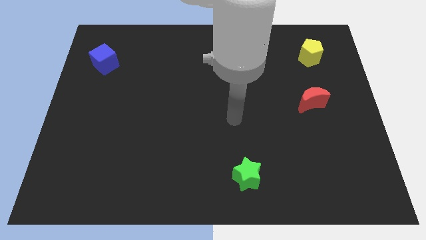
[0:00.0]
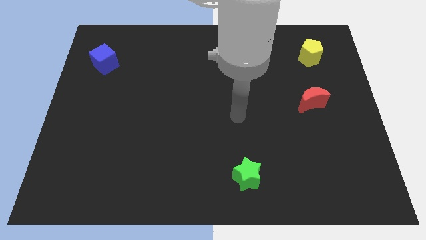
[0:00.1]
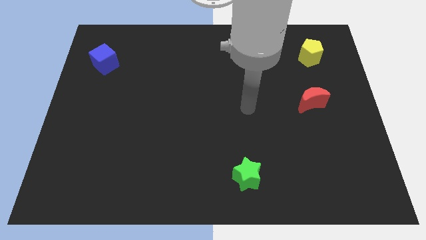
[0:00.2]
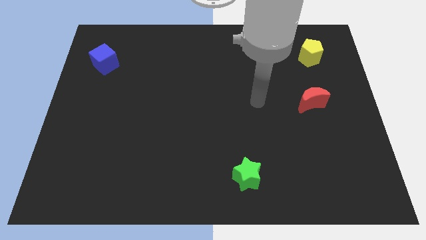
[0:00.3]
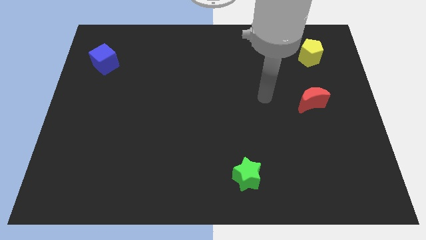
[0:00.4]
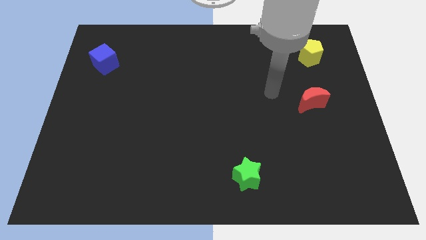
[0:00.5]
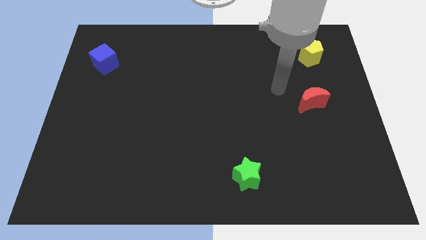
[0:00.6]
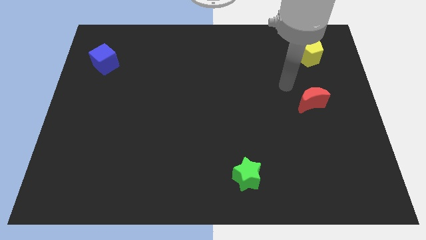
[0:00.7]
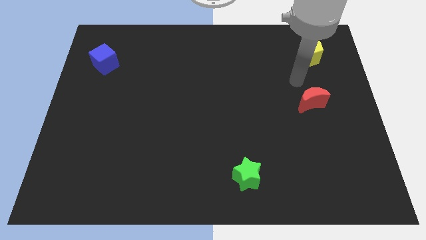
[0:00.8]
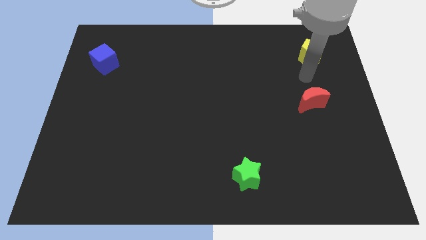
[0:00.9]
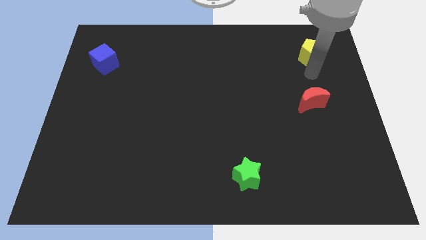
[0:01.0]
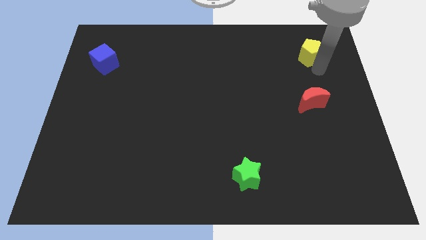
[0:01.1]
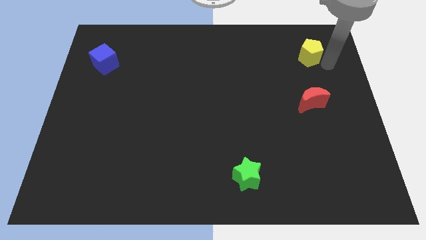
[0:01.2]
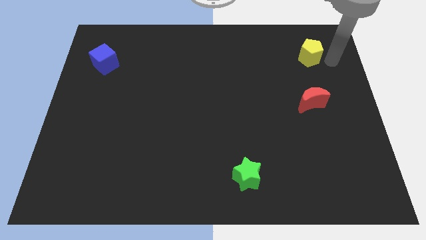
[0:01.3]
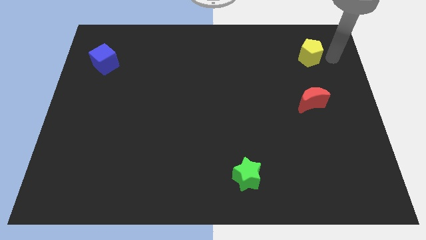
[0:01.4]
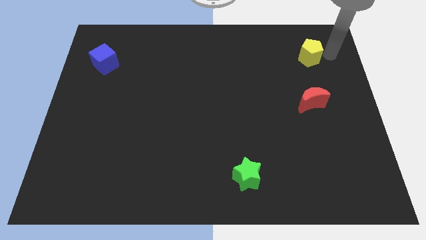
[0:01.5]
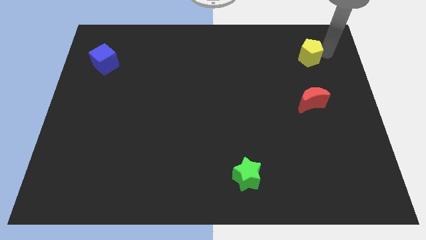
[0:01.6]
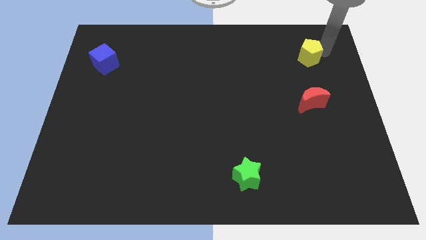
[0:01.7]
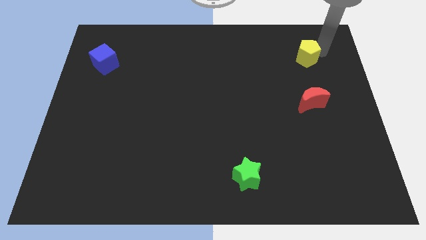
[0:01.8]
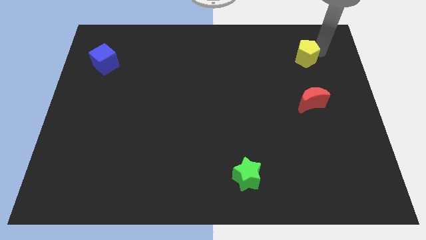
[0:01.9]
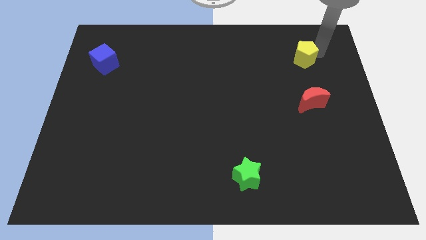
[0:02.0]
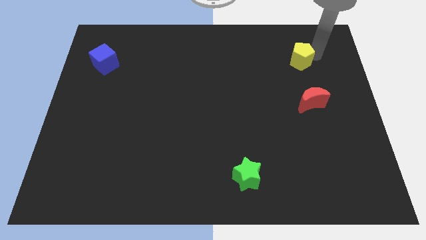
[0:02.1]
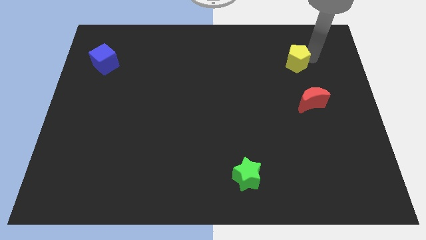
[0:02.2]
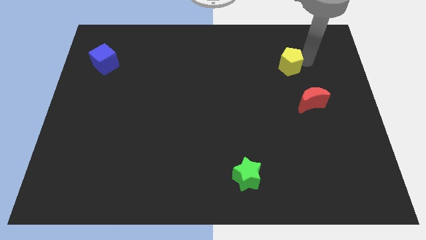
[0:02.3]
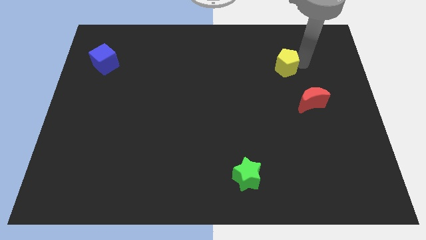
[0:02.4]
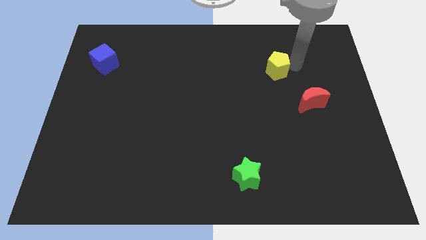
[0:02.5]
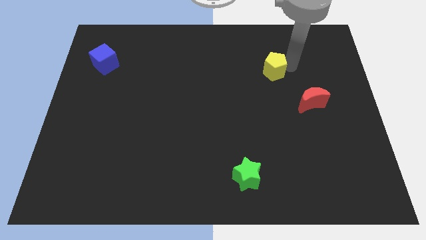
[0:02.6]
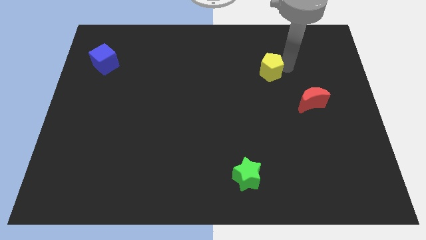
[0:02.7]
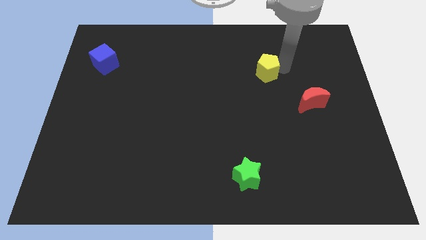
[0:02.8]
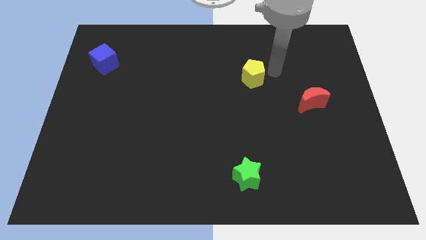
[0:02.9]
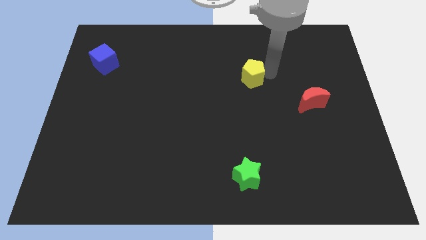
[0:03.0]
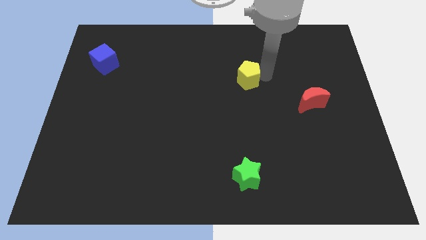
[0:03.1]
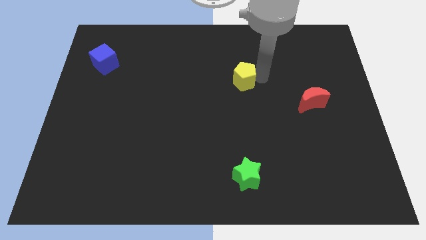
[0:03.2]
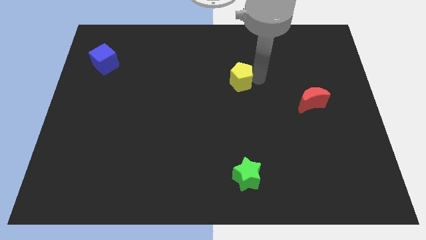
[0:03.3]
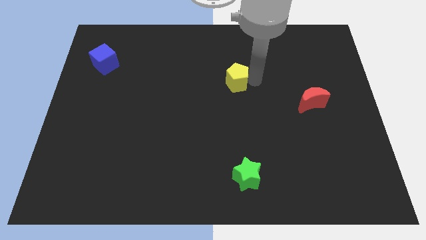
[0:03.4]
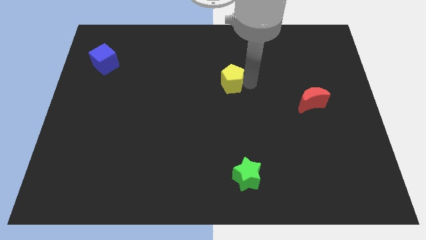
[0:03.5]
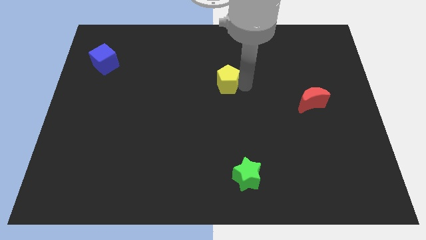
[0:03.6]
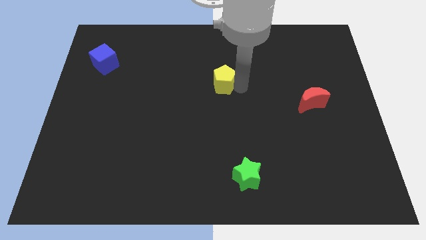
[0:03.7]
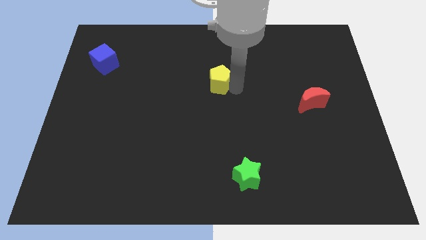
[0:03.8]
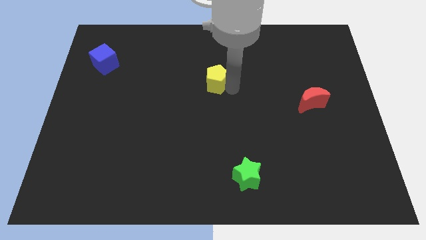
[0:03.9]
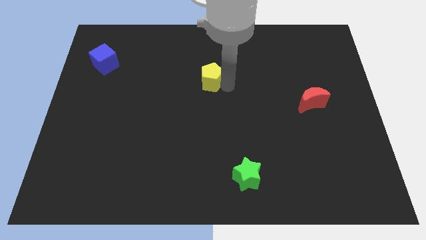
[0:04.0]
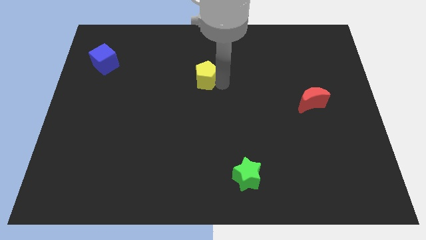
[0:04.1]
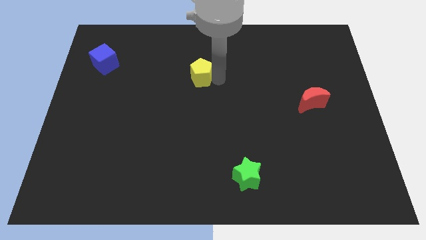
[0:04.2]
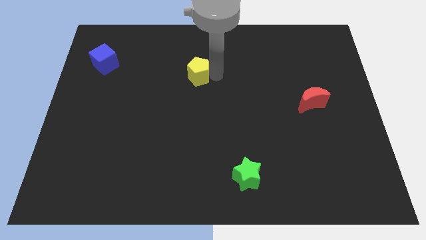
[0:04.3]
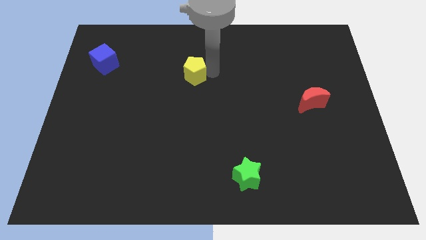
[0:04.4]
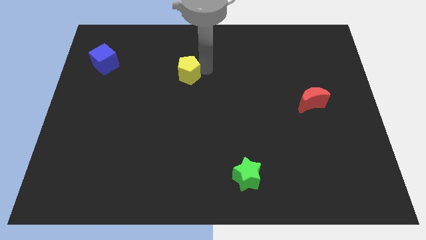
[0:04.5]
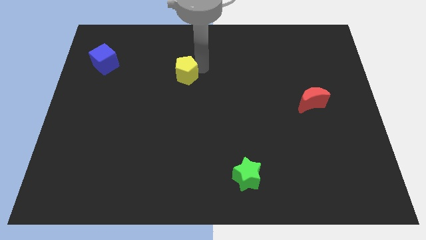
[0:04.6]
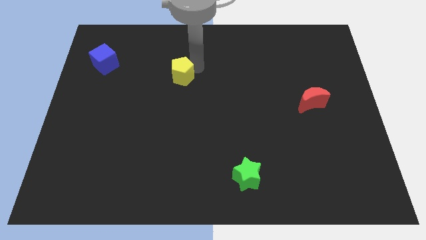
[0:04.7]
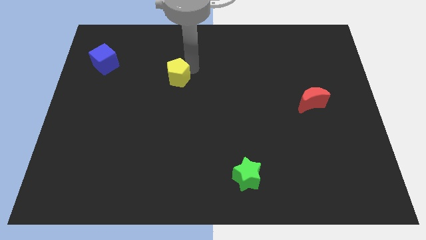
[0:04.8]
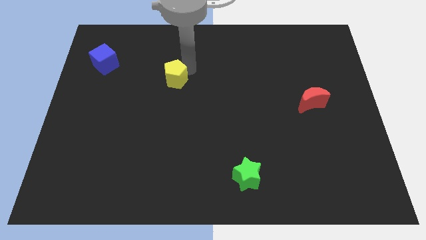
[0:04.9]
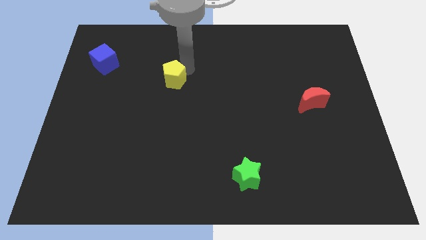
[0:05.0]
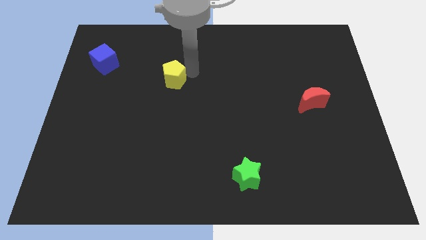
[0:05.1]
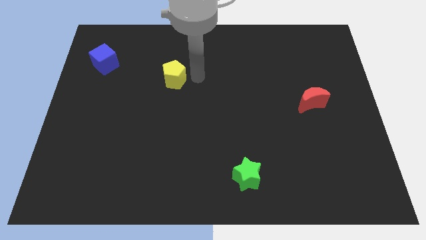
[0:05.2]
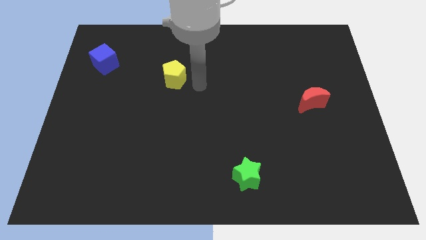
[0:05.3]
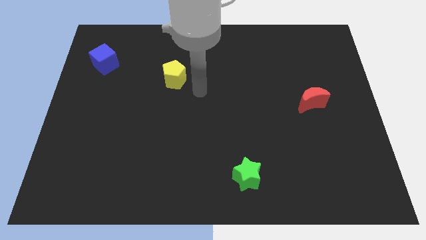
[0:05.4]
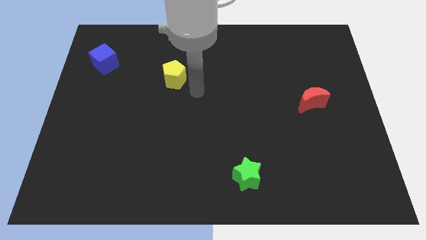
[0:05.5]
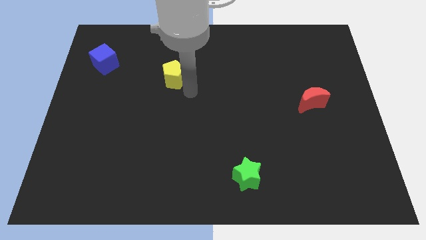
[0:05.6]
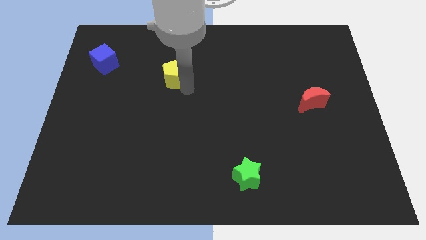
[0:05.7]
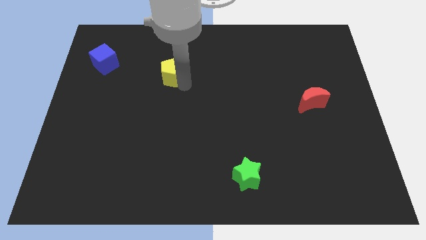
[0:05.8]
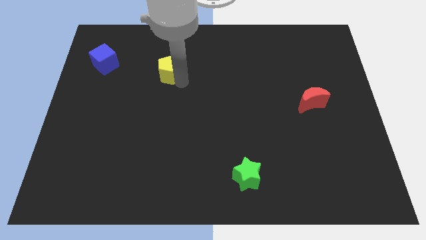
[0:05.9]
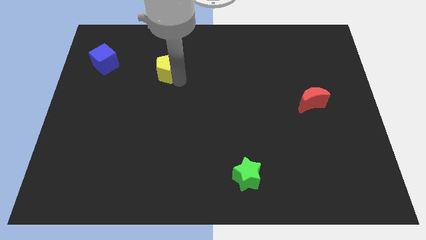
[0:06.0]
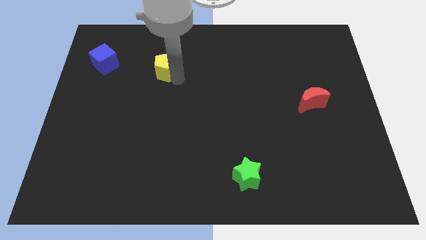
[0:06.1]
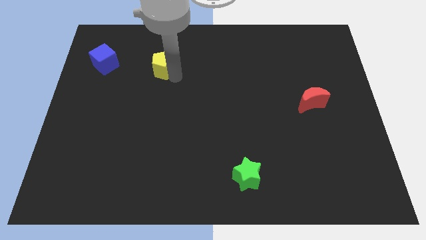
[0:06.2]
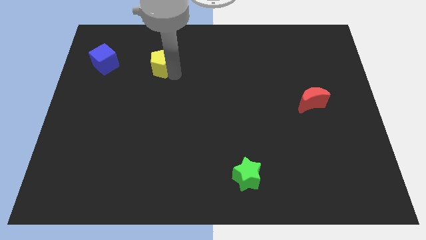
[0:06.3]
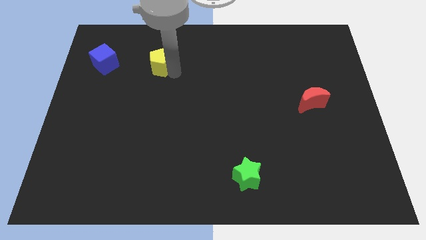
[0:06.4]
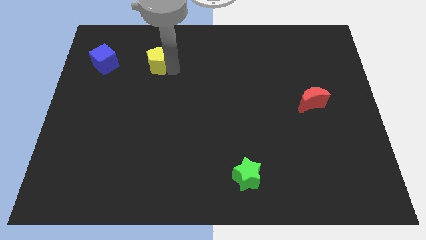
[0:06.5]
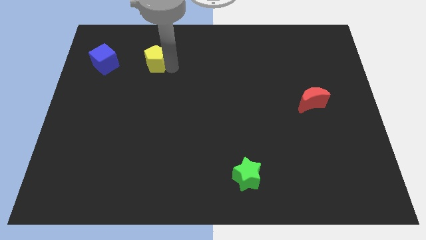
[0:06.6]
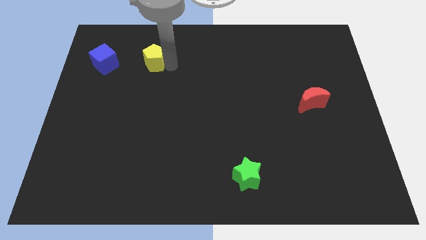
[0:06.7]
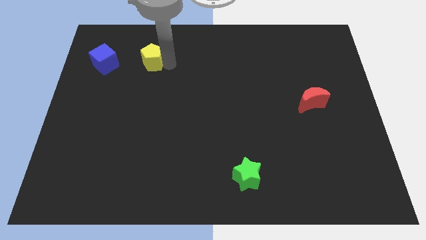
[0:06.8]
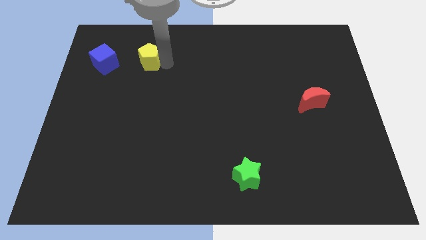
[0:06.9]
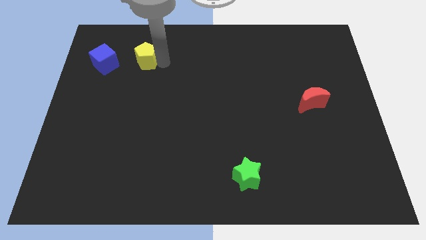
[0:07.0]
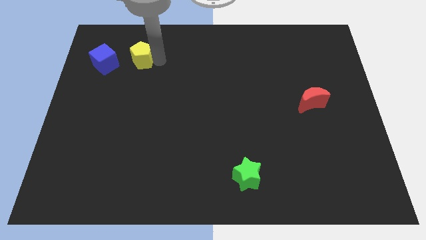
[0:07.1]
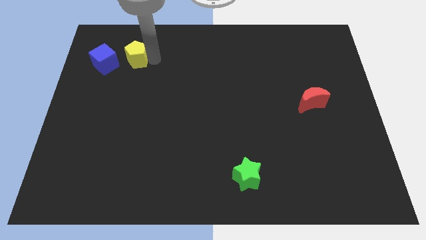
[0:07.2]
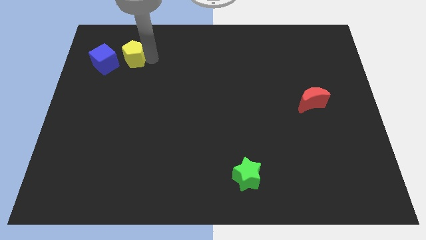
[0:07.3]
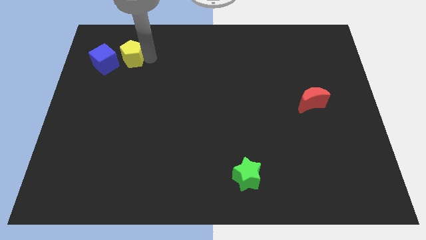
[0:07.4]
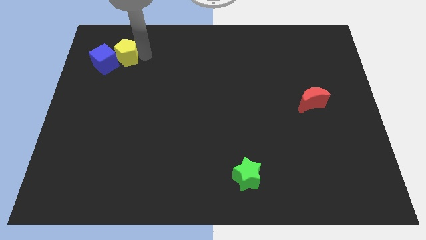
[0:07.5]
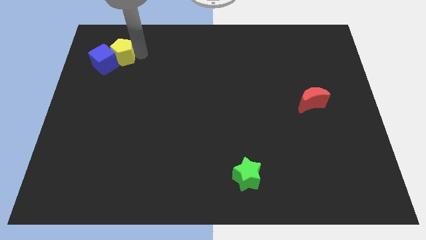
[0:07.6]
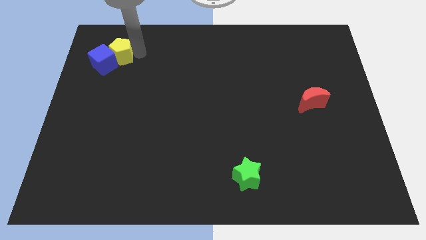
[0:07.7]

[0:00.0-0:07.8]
push the pentagon next to the cube

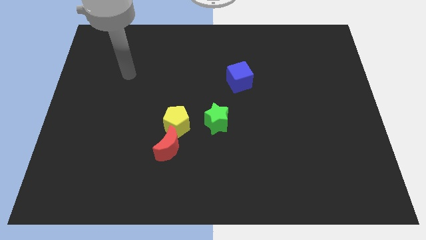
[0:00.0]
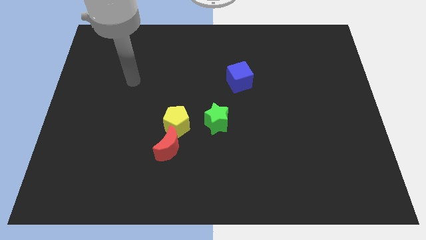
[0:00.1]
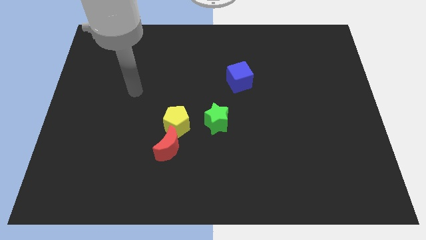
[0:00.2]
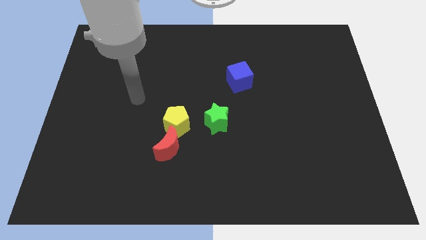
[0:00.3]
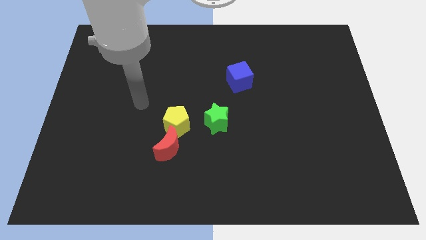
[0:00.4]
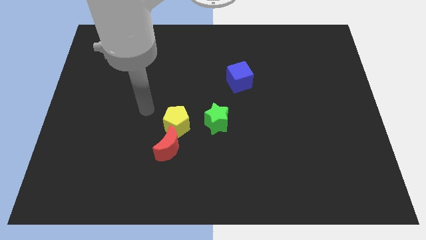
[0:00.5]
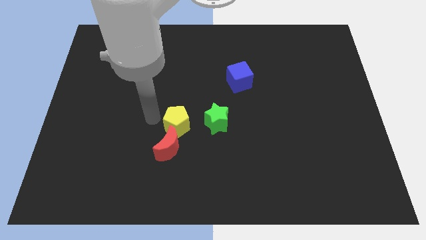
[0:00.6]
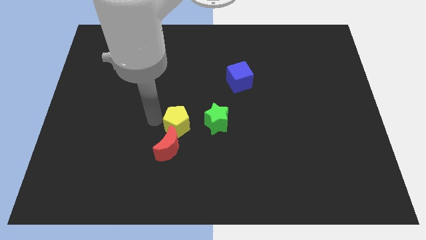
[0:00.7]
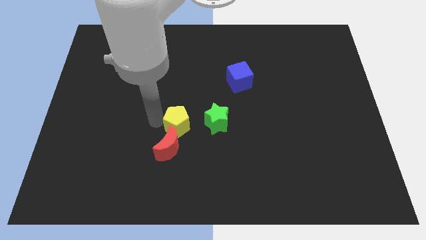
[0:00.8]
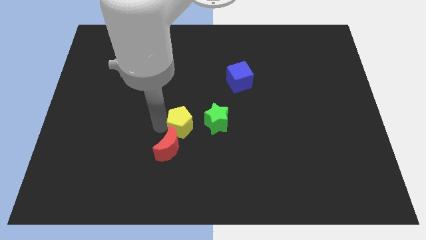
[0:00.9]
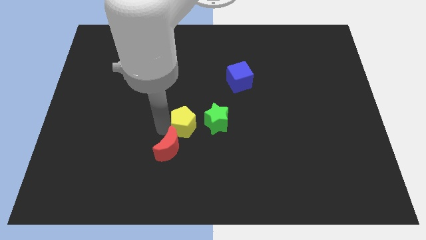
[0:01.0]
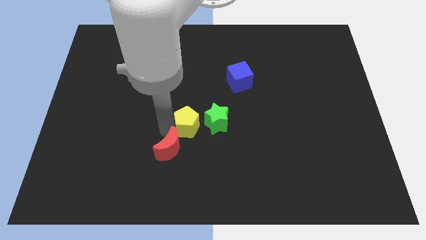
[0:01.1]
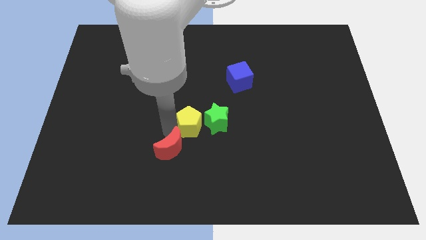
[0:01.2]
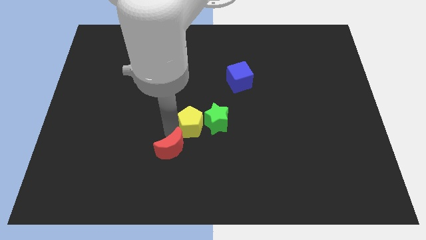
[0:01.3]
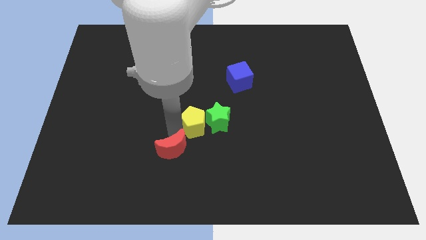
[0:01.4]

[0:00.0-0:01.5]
slide the pentagon towards the star
